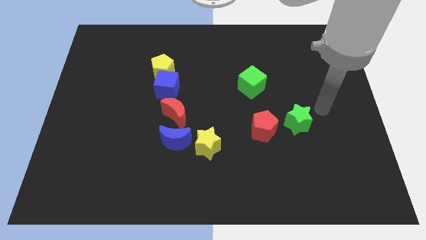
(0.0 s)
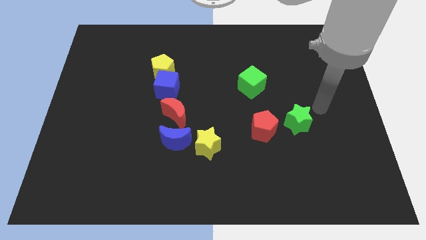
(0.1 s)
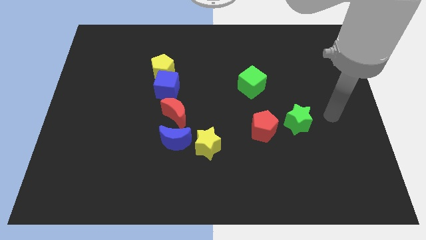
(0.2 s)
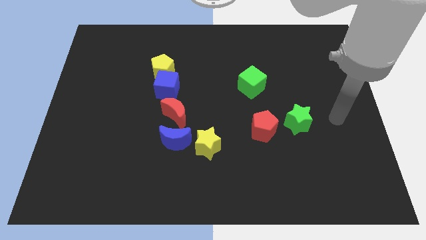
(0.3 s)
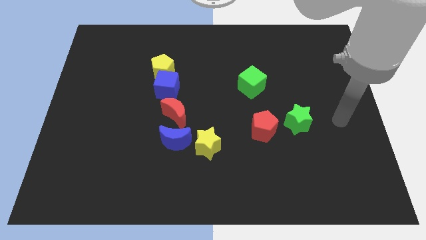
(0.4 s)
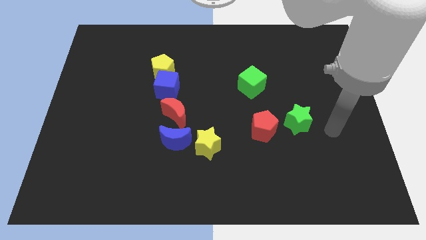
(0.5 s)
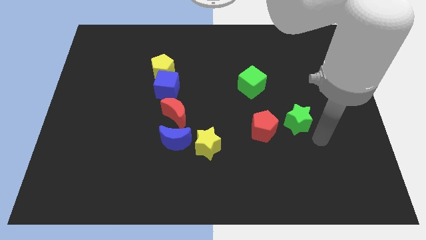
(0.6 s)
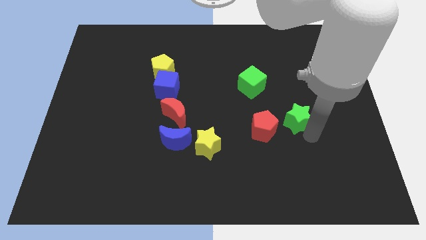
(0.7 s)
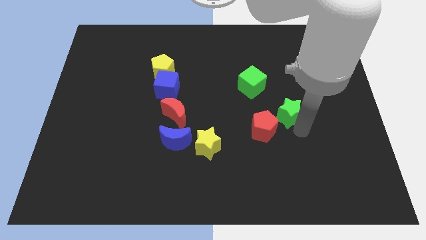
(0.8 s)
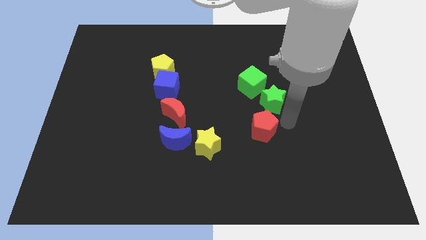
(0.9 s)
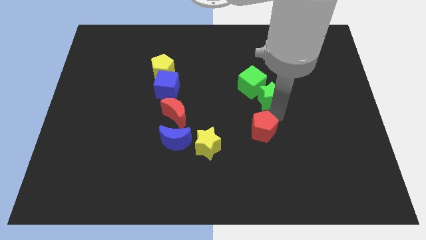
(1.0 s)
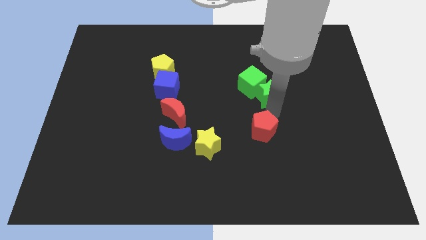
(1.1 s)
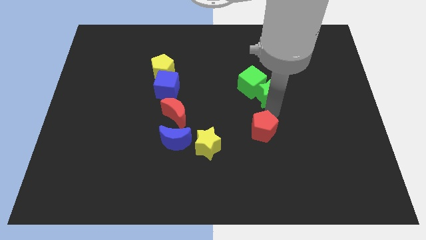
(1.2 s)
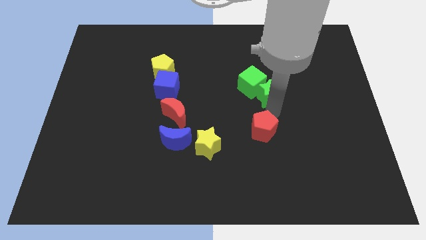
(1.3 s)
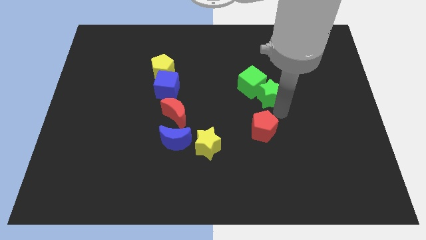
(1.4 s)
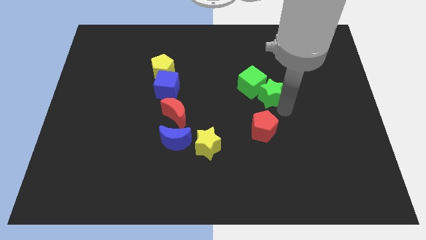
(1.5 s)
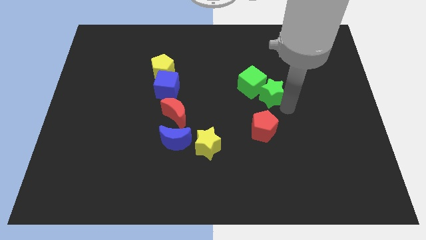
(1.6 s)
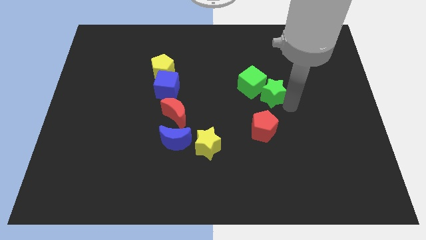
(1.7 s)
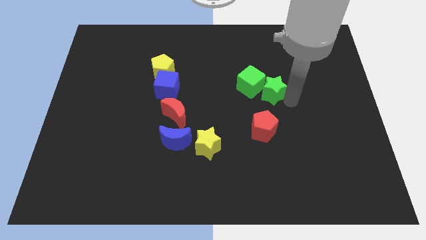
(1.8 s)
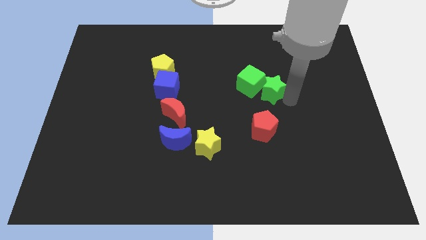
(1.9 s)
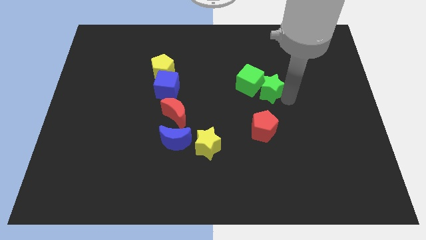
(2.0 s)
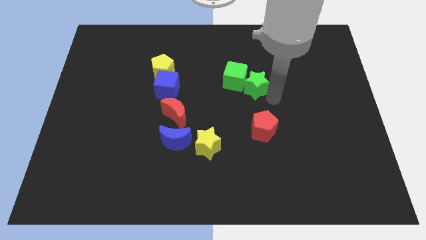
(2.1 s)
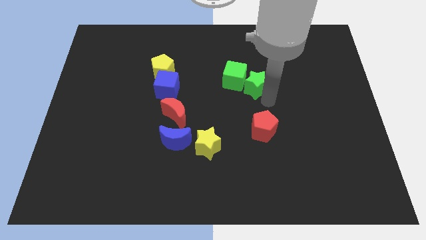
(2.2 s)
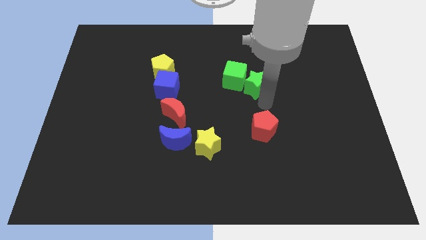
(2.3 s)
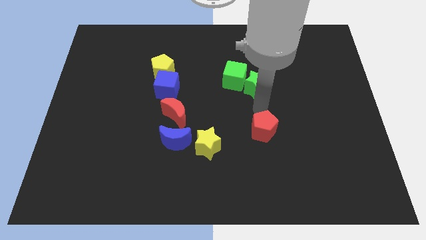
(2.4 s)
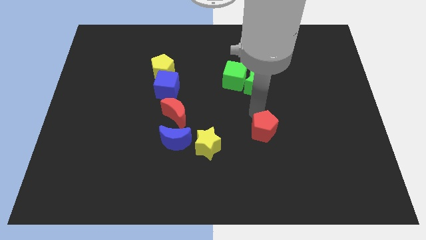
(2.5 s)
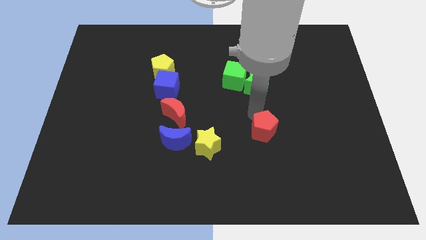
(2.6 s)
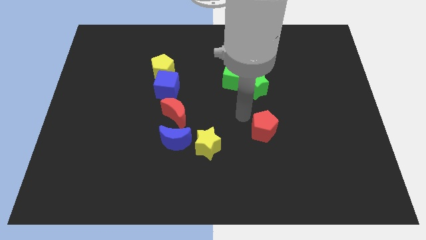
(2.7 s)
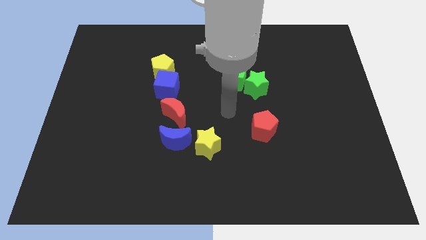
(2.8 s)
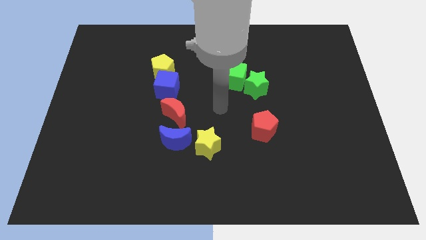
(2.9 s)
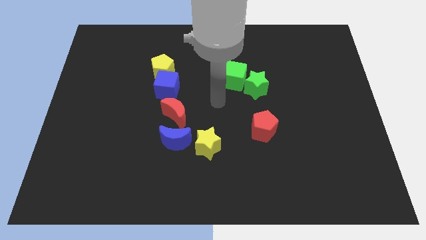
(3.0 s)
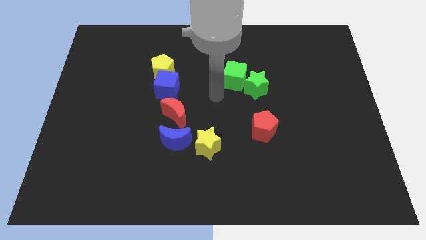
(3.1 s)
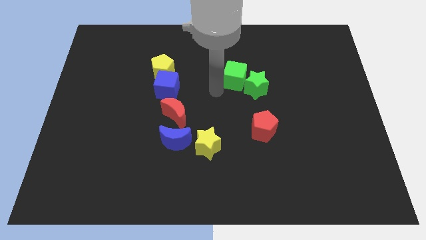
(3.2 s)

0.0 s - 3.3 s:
put the green star into the green cube

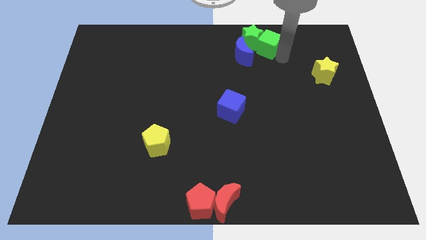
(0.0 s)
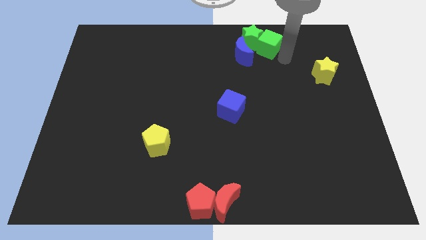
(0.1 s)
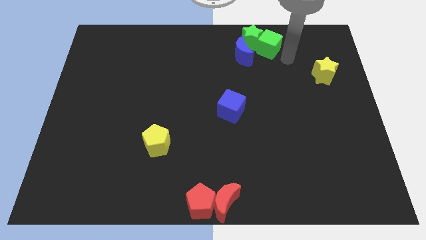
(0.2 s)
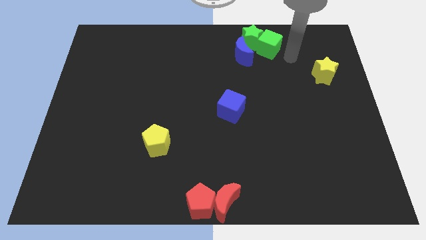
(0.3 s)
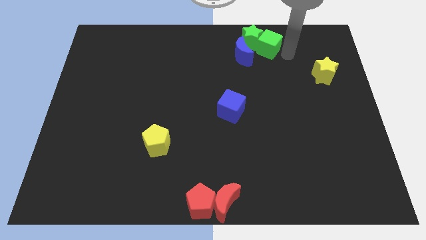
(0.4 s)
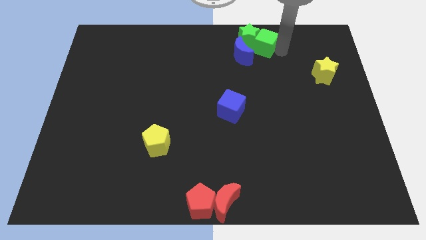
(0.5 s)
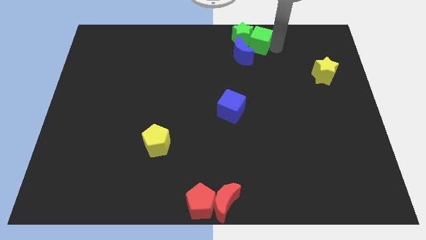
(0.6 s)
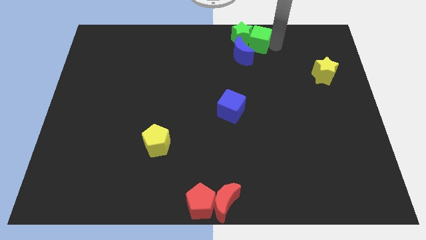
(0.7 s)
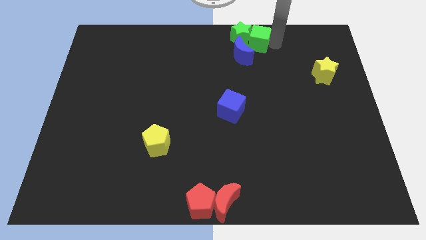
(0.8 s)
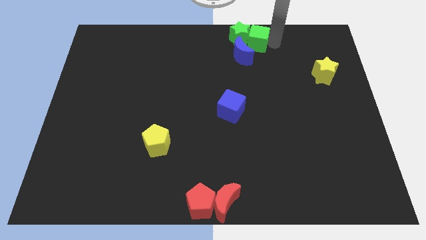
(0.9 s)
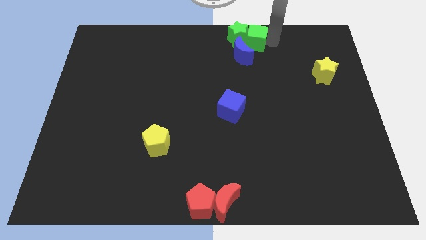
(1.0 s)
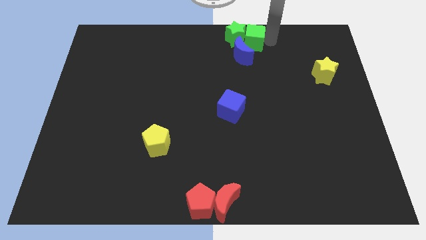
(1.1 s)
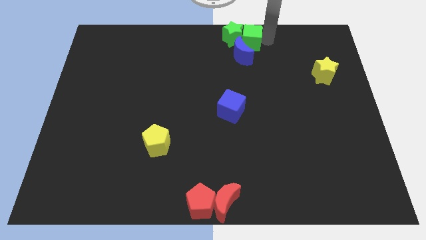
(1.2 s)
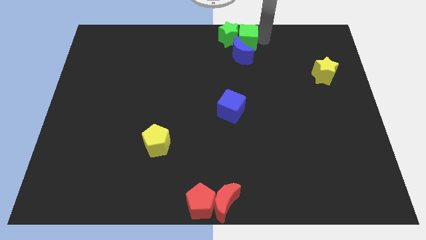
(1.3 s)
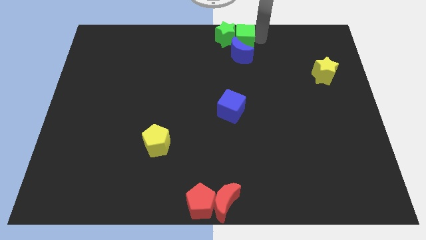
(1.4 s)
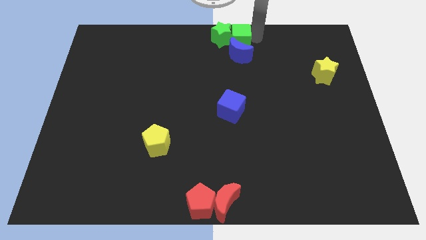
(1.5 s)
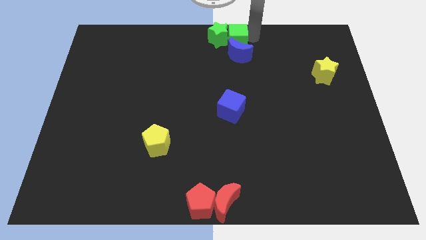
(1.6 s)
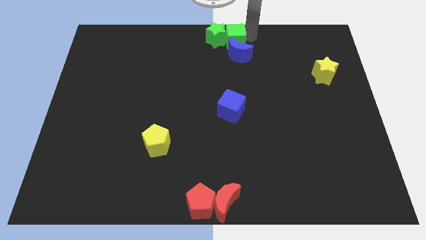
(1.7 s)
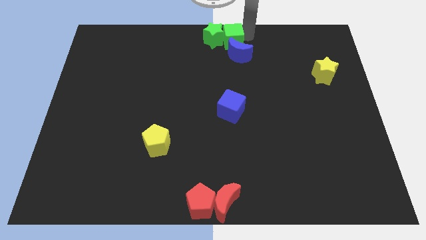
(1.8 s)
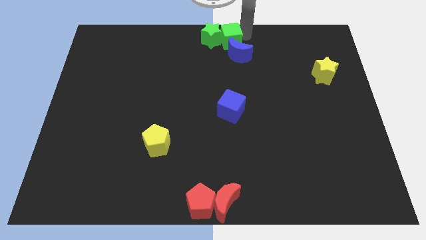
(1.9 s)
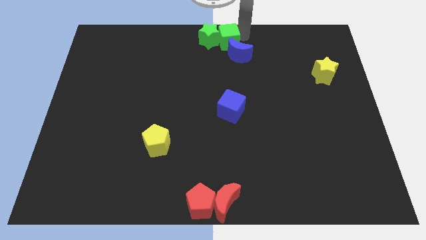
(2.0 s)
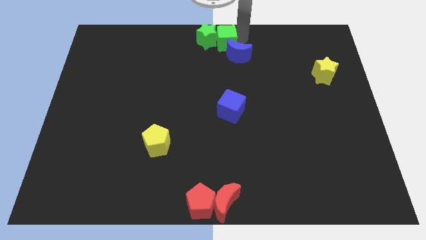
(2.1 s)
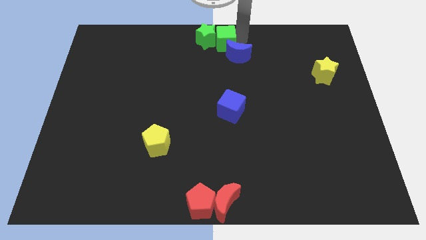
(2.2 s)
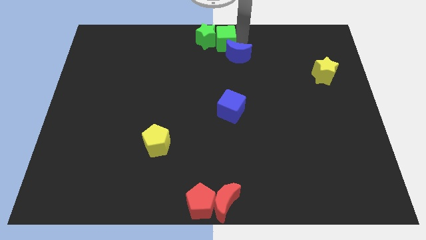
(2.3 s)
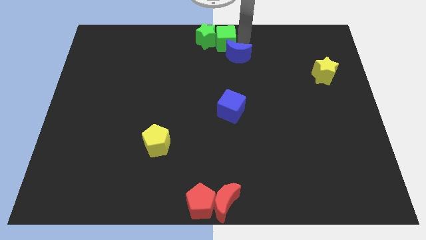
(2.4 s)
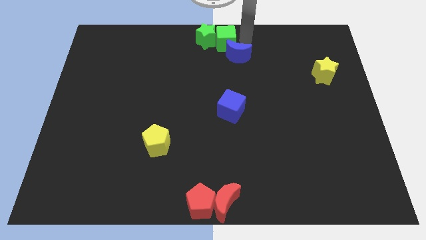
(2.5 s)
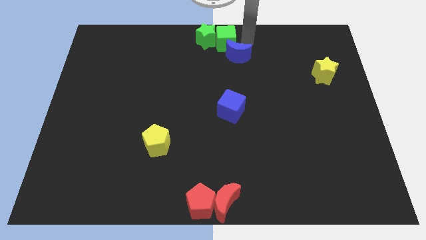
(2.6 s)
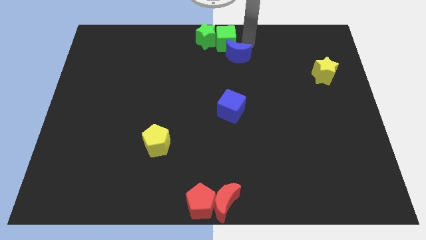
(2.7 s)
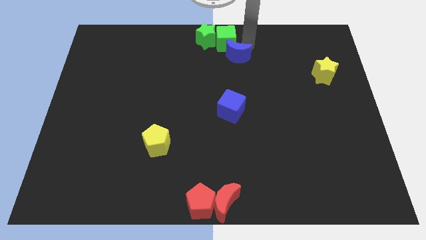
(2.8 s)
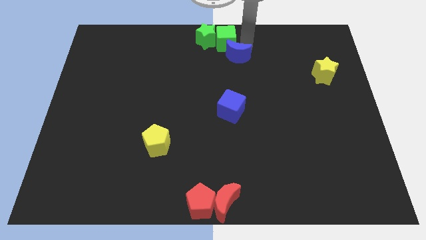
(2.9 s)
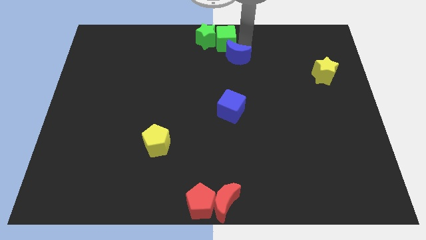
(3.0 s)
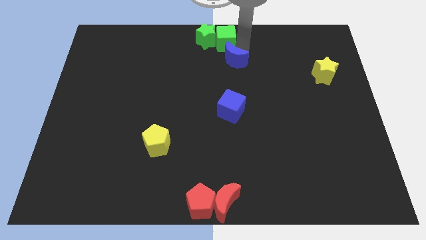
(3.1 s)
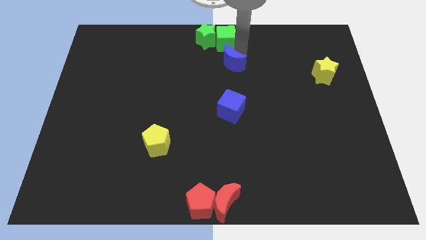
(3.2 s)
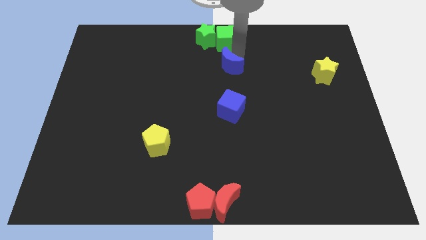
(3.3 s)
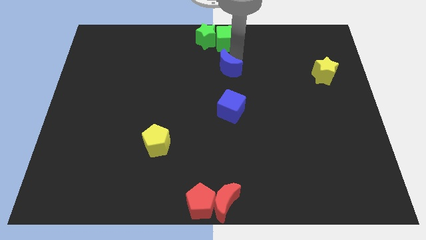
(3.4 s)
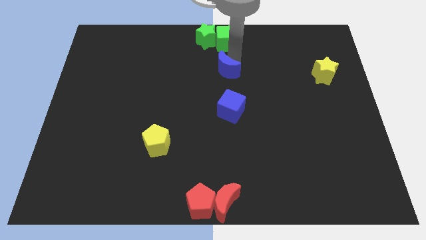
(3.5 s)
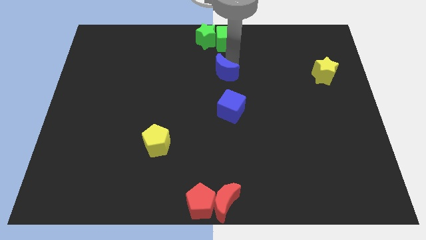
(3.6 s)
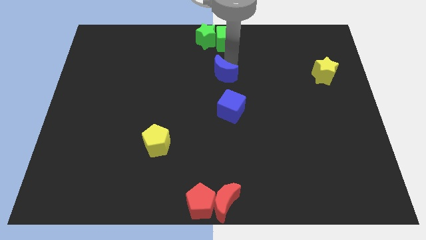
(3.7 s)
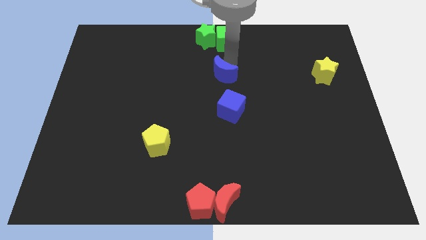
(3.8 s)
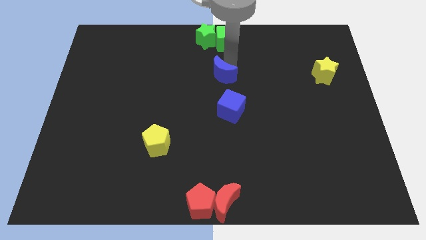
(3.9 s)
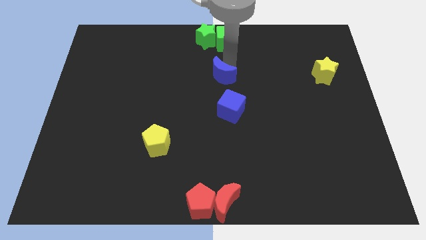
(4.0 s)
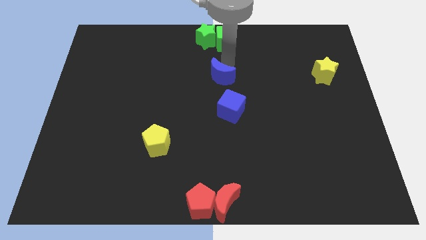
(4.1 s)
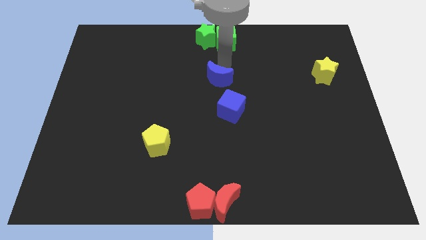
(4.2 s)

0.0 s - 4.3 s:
separate the blue moon from green blocks

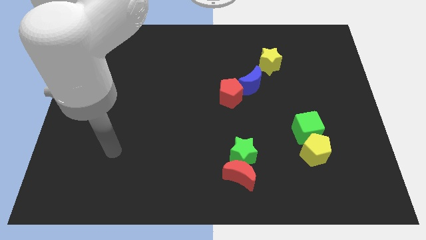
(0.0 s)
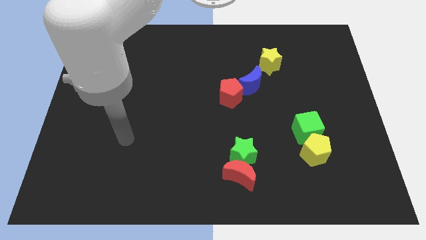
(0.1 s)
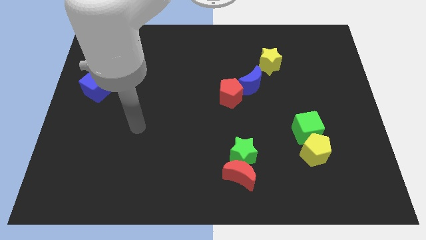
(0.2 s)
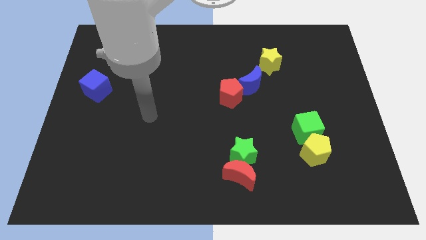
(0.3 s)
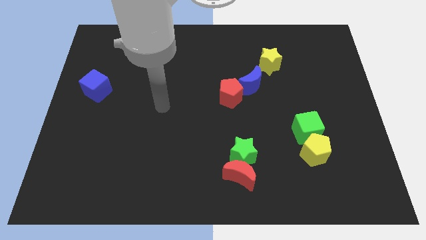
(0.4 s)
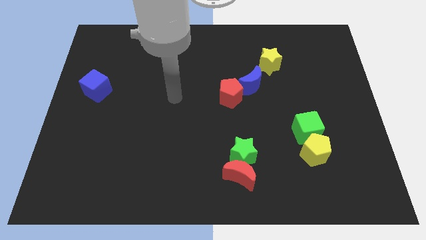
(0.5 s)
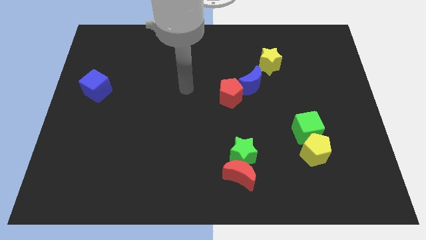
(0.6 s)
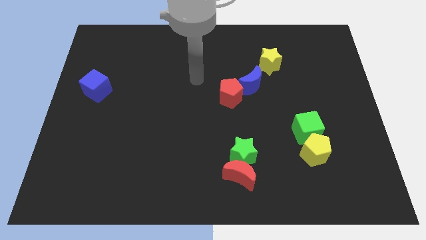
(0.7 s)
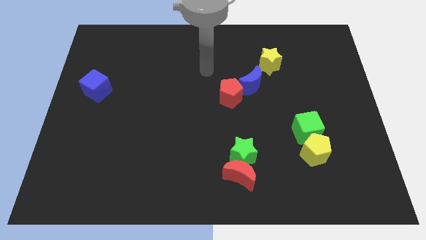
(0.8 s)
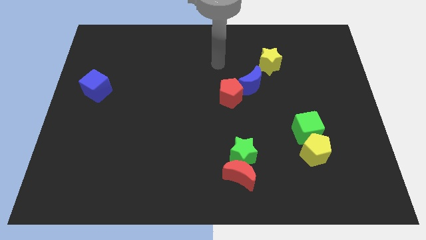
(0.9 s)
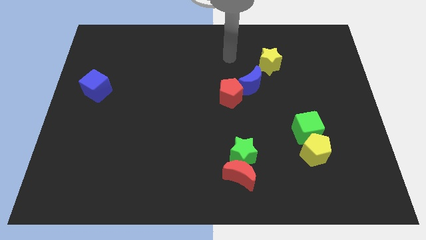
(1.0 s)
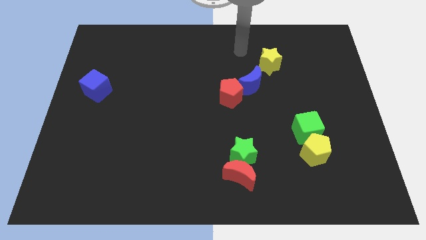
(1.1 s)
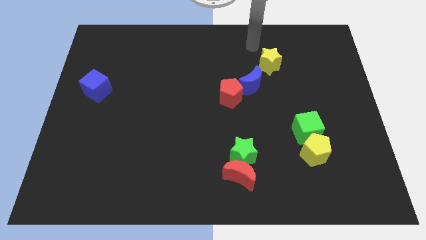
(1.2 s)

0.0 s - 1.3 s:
move your arm to the top center

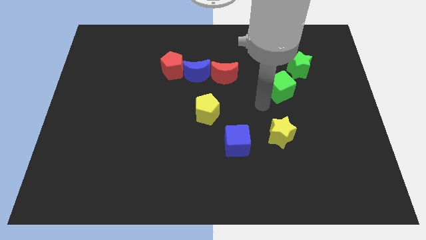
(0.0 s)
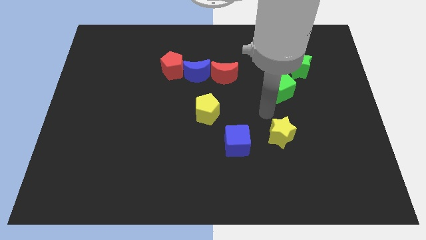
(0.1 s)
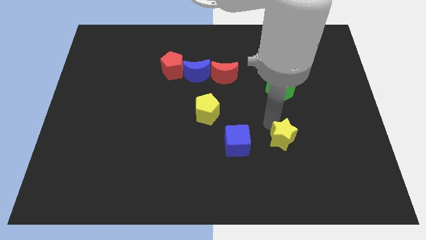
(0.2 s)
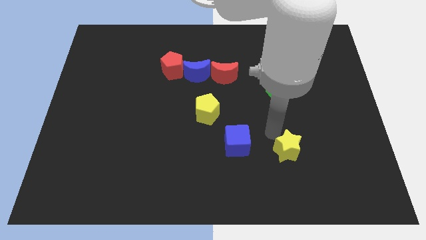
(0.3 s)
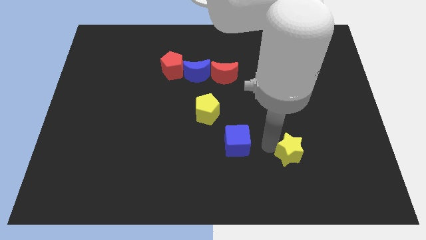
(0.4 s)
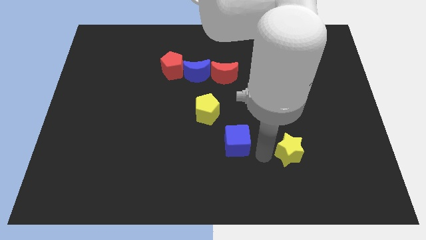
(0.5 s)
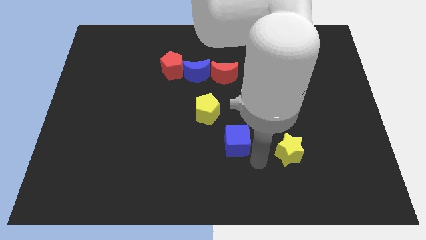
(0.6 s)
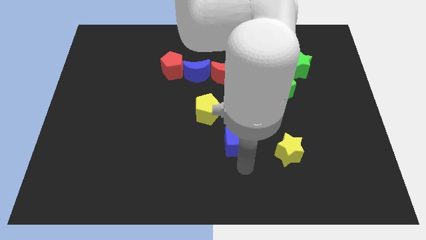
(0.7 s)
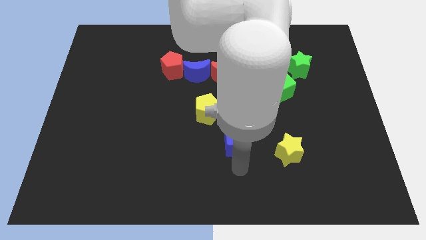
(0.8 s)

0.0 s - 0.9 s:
slightly push the yellow star towards the bottom right of the board
